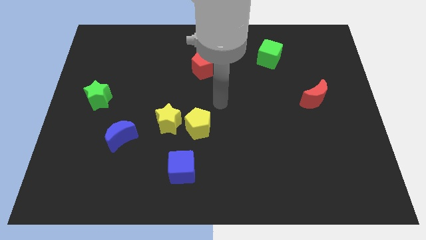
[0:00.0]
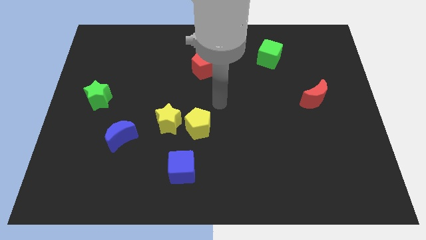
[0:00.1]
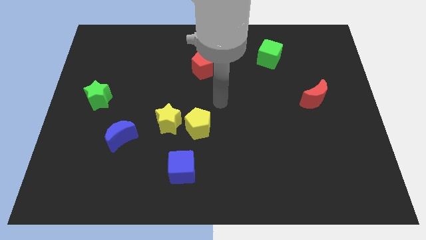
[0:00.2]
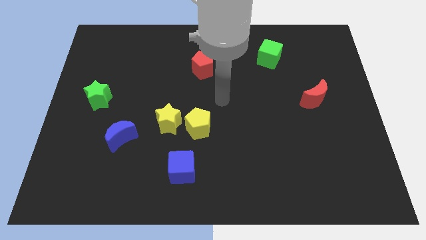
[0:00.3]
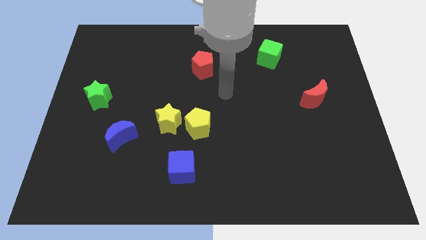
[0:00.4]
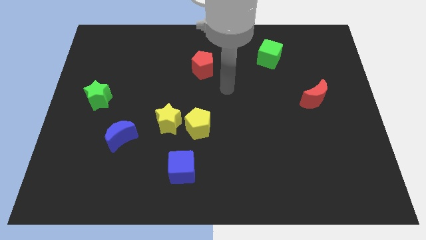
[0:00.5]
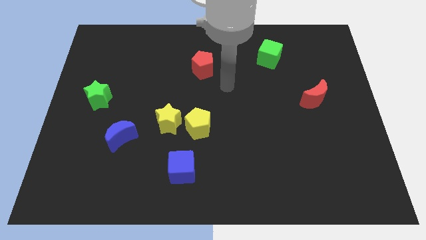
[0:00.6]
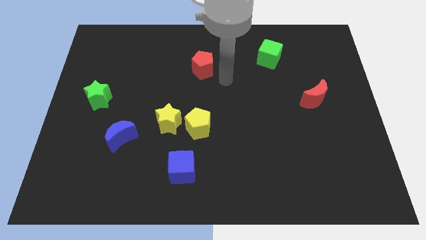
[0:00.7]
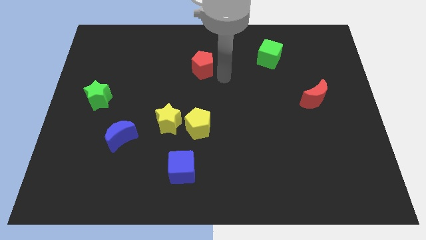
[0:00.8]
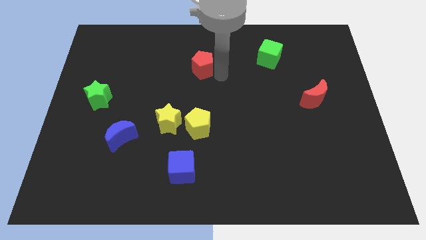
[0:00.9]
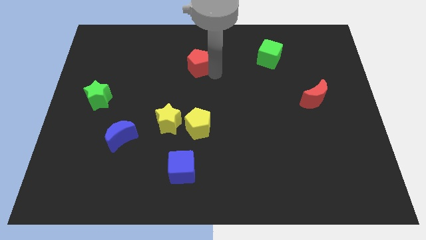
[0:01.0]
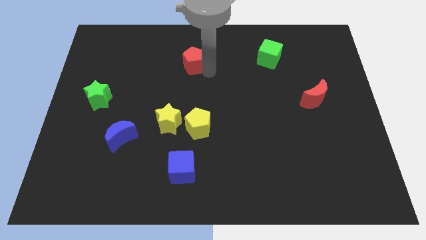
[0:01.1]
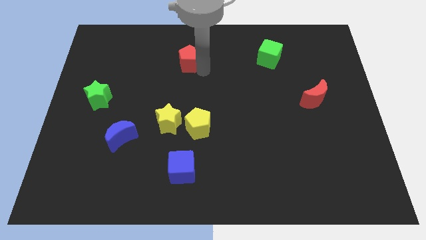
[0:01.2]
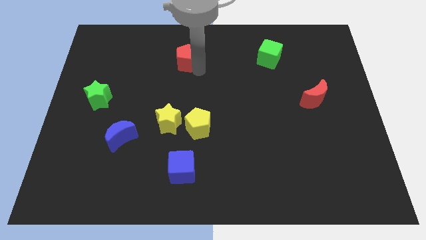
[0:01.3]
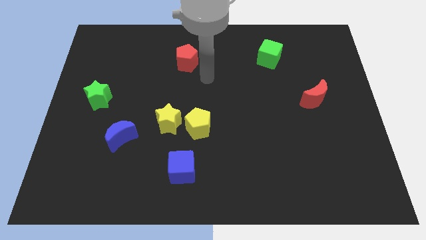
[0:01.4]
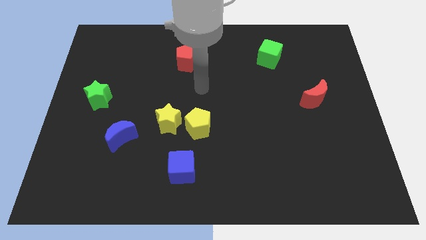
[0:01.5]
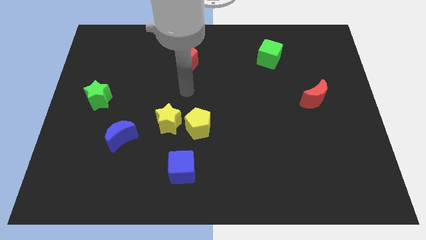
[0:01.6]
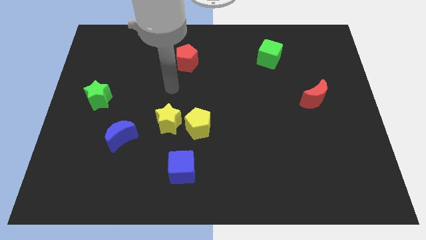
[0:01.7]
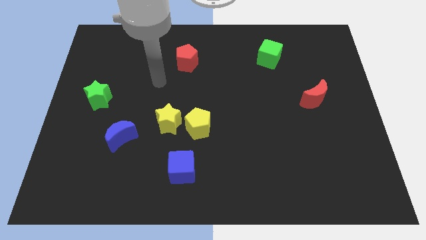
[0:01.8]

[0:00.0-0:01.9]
move the red pentagon diagonally to the blue moon

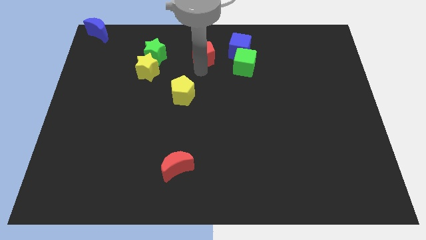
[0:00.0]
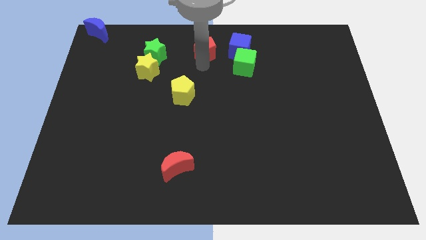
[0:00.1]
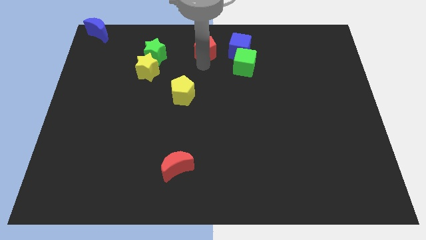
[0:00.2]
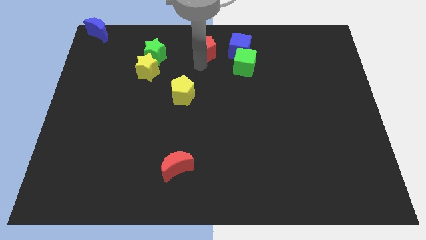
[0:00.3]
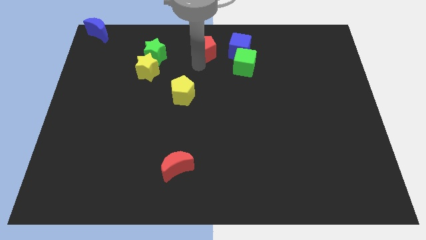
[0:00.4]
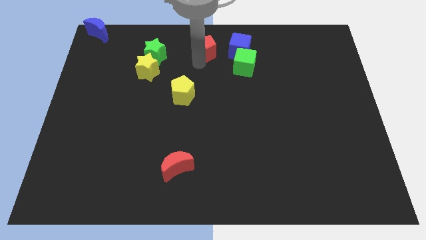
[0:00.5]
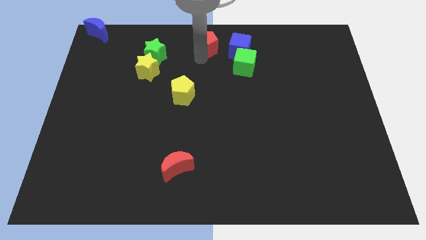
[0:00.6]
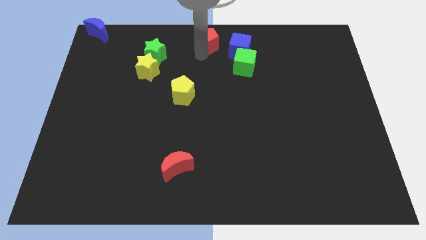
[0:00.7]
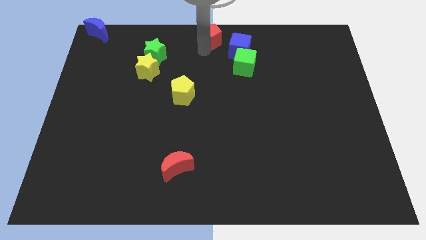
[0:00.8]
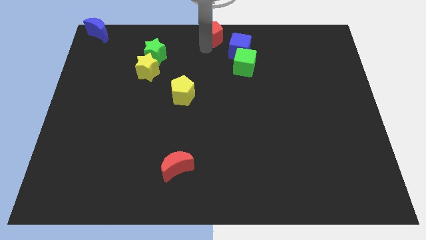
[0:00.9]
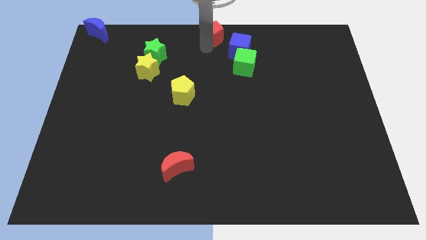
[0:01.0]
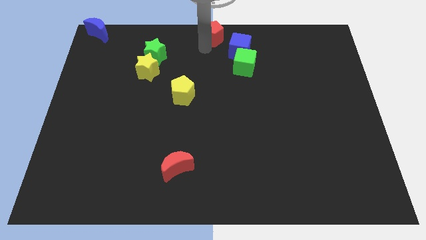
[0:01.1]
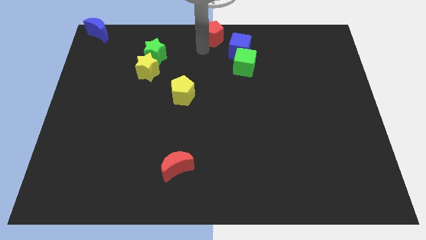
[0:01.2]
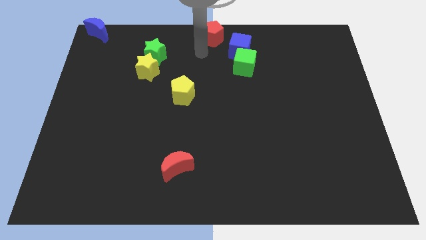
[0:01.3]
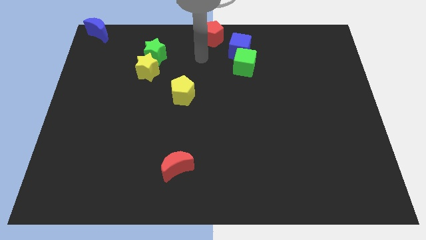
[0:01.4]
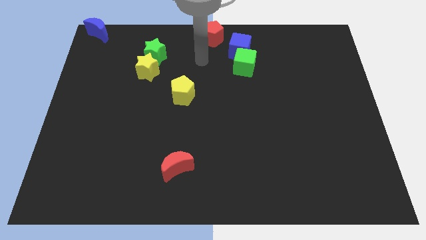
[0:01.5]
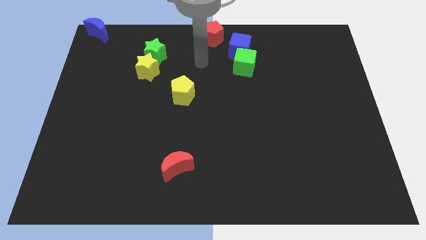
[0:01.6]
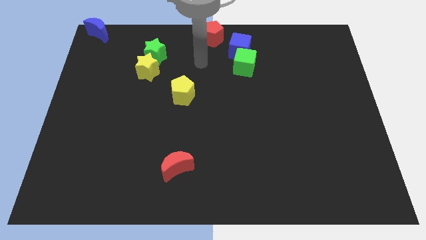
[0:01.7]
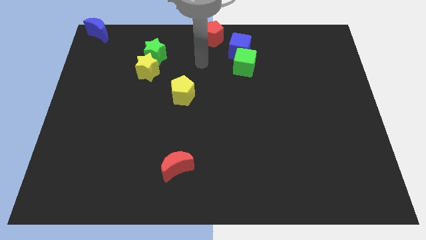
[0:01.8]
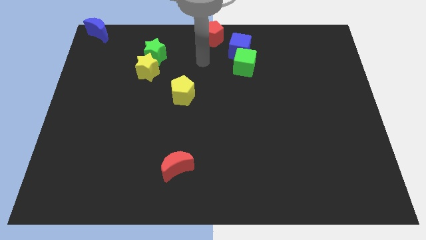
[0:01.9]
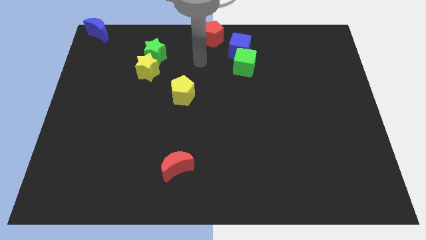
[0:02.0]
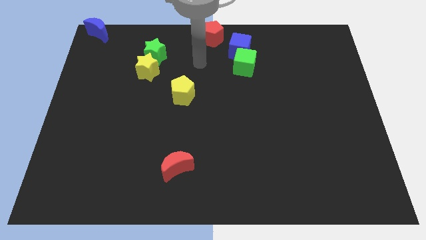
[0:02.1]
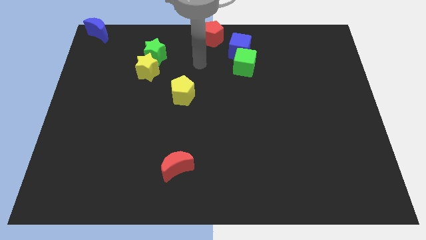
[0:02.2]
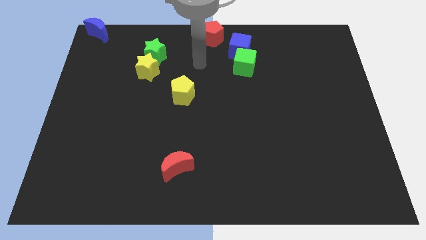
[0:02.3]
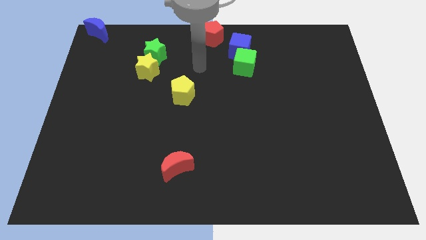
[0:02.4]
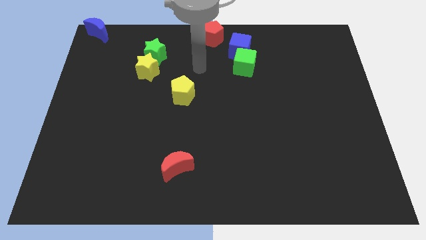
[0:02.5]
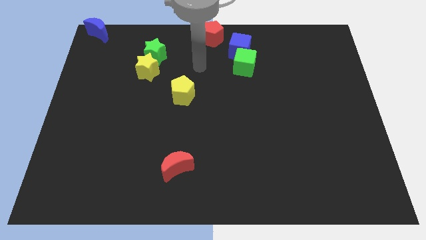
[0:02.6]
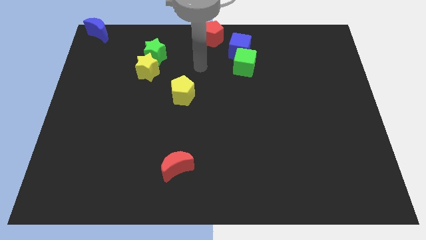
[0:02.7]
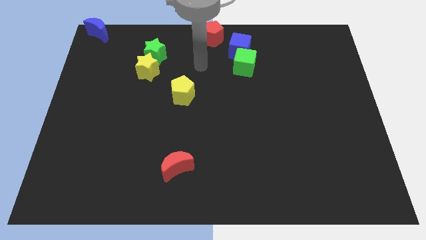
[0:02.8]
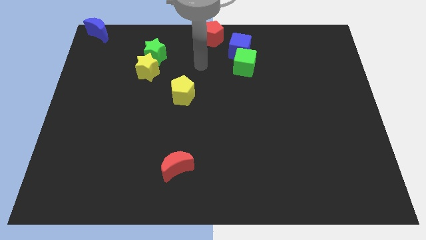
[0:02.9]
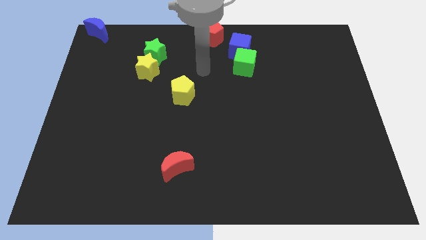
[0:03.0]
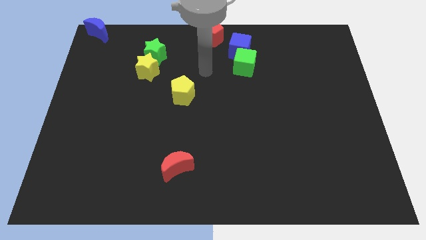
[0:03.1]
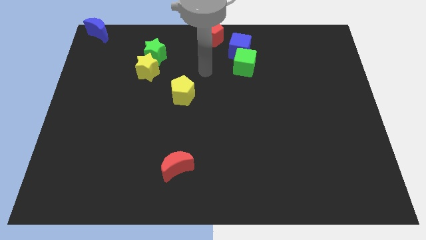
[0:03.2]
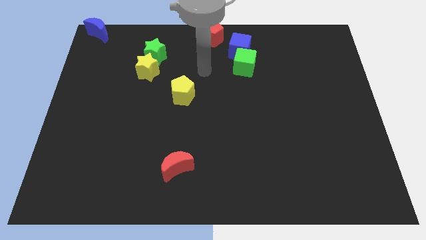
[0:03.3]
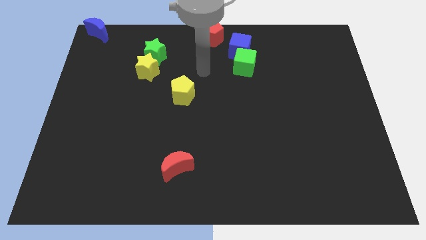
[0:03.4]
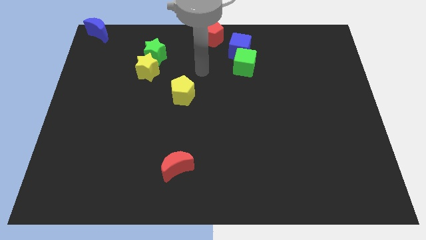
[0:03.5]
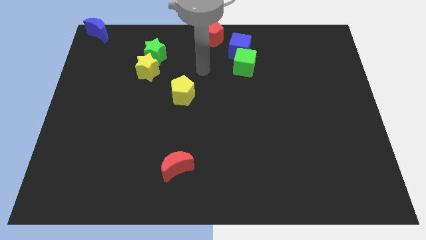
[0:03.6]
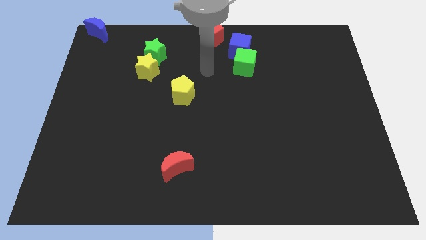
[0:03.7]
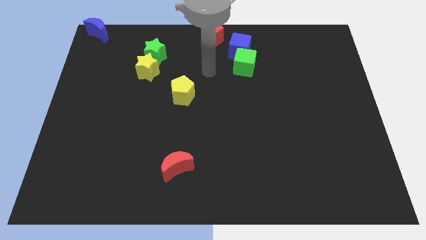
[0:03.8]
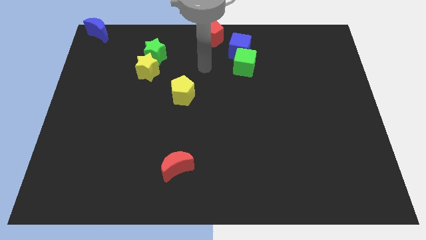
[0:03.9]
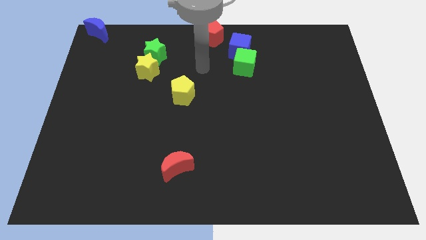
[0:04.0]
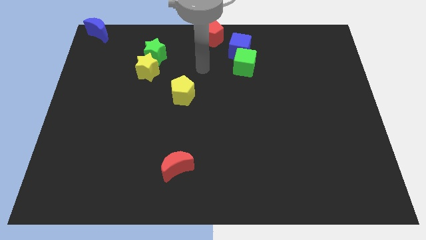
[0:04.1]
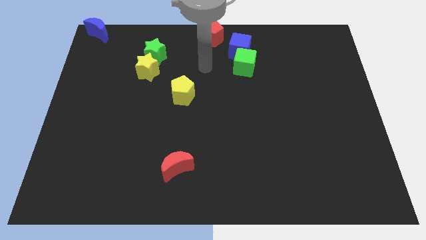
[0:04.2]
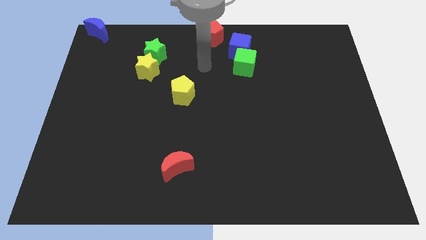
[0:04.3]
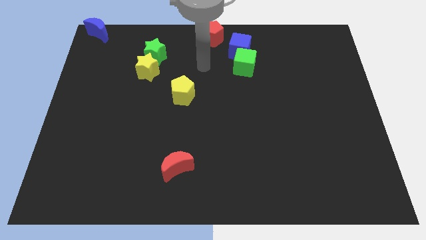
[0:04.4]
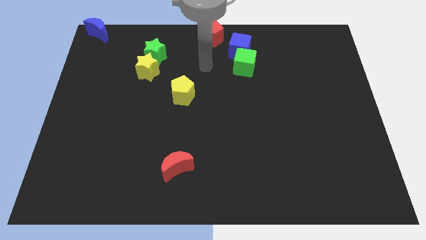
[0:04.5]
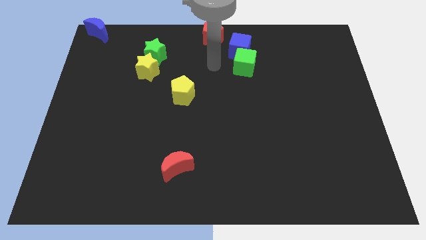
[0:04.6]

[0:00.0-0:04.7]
move the arm to center of the board

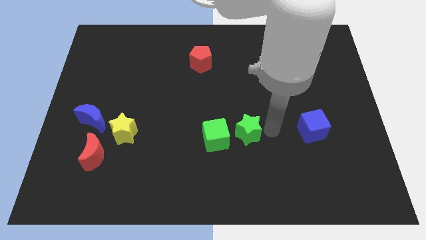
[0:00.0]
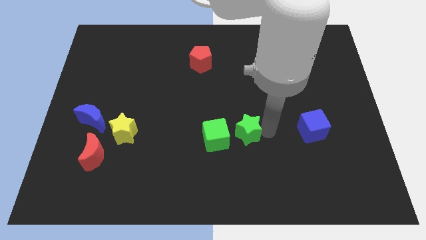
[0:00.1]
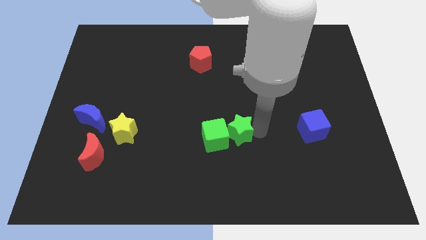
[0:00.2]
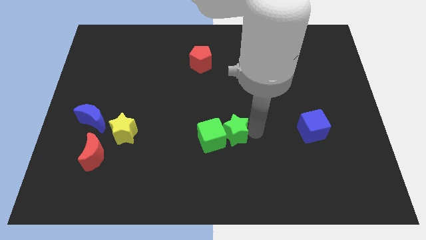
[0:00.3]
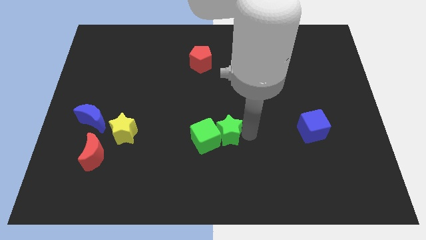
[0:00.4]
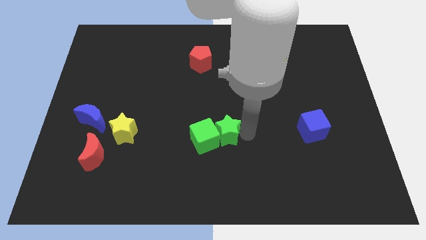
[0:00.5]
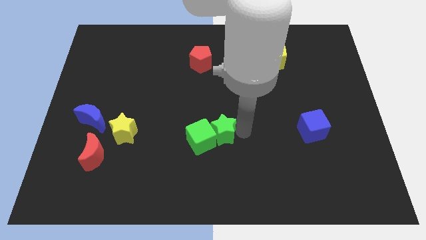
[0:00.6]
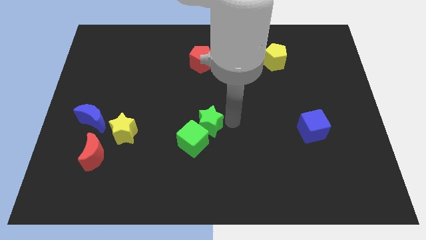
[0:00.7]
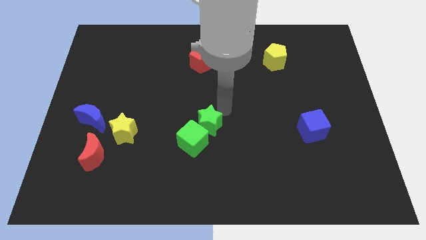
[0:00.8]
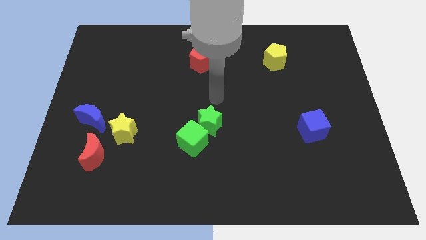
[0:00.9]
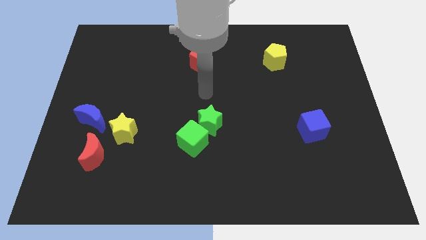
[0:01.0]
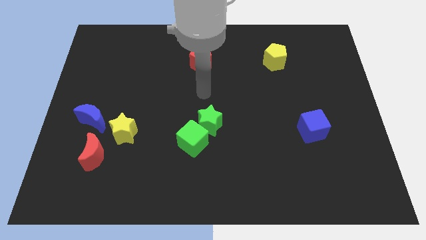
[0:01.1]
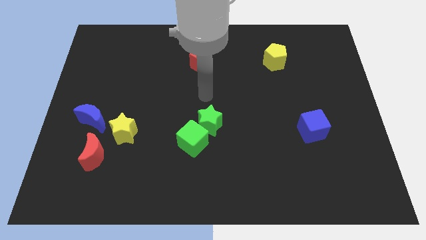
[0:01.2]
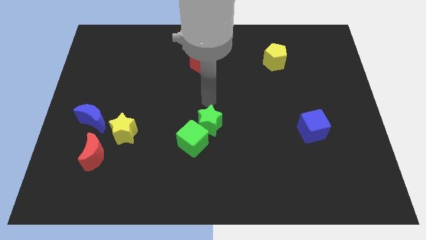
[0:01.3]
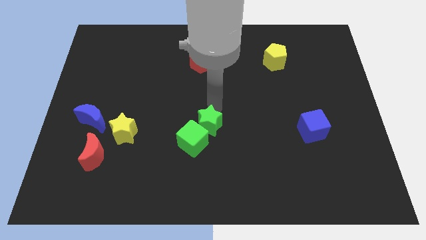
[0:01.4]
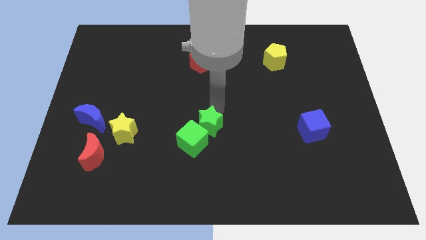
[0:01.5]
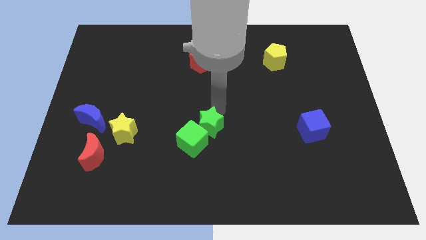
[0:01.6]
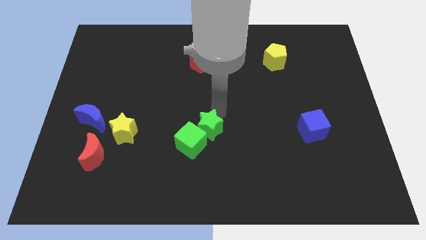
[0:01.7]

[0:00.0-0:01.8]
push the green blocks towards bottom

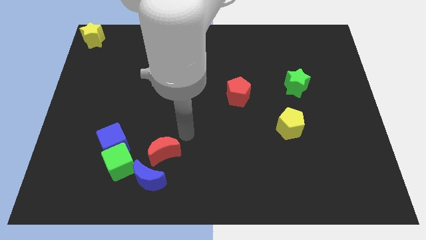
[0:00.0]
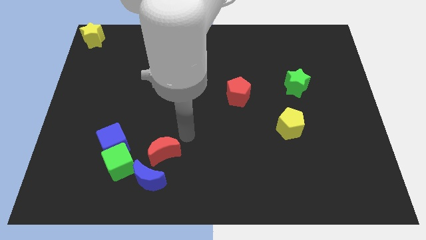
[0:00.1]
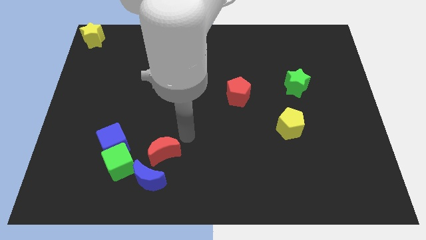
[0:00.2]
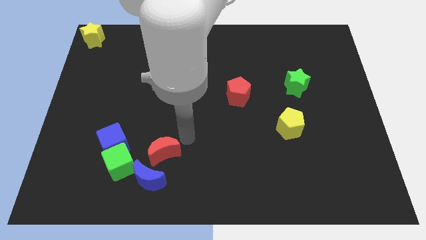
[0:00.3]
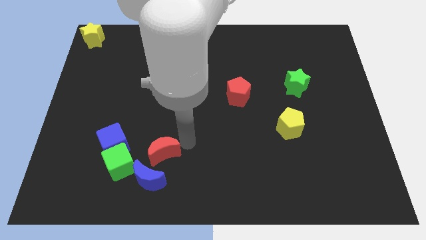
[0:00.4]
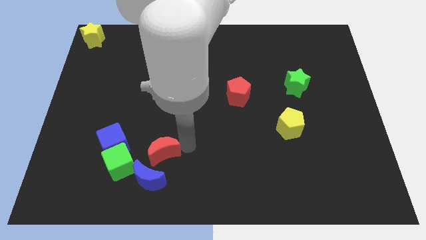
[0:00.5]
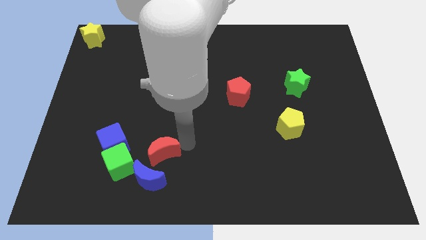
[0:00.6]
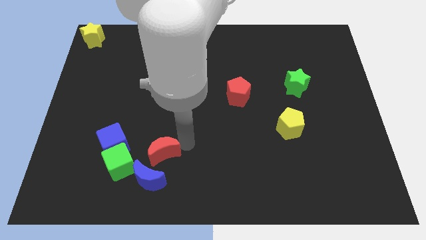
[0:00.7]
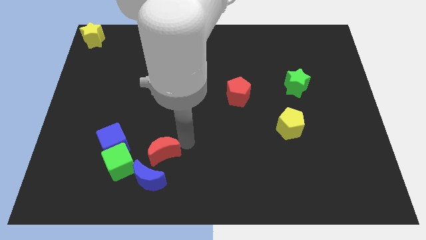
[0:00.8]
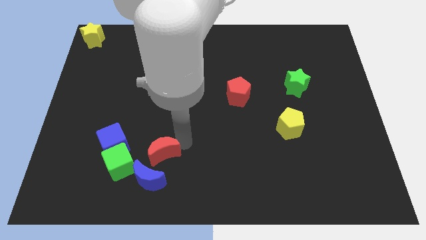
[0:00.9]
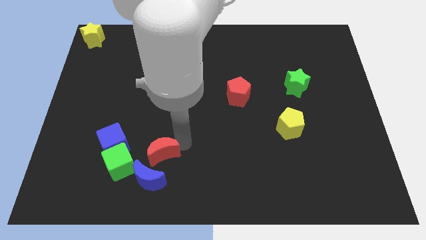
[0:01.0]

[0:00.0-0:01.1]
tap the red crescent
